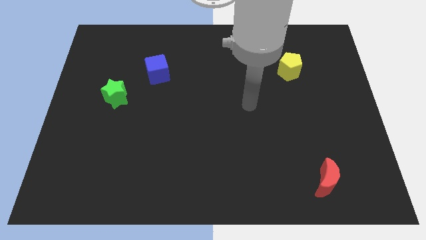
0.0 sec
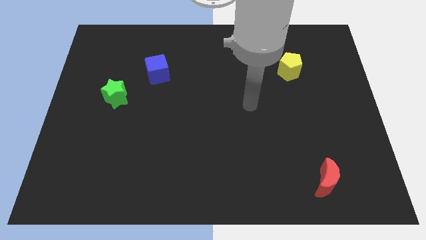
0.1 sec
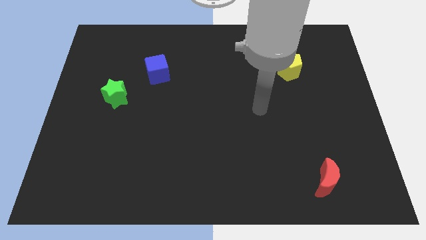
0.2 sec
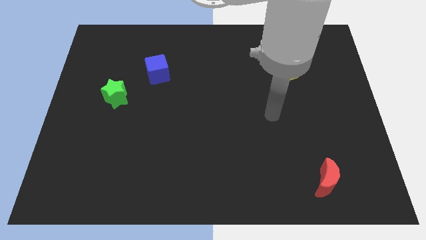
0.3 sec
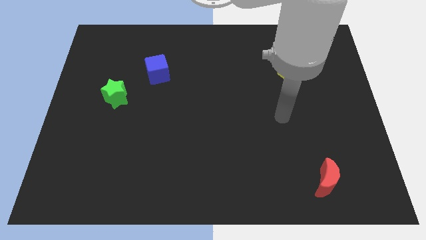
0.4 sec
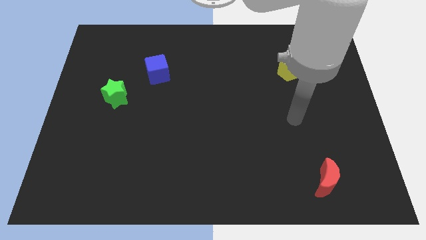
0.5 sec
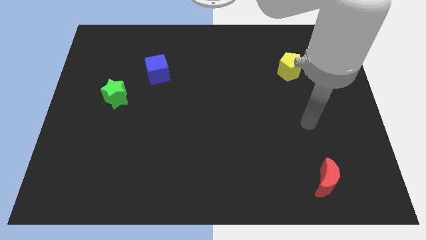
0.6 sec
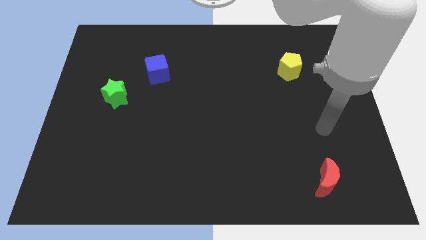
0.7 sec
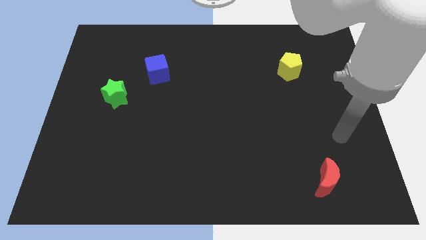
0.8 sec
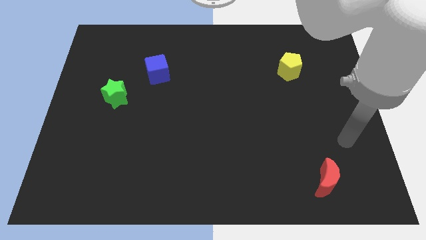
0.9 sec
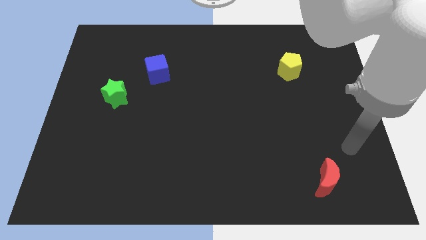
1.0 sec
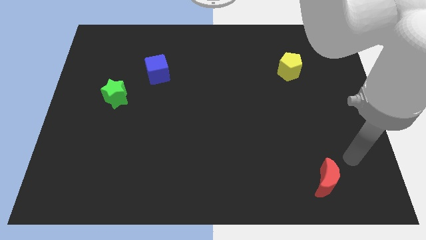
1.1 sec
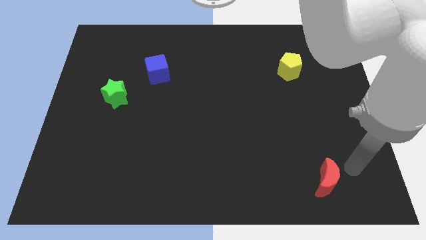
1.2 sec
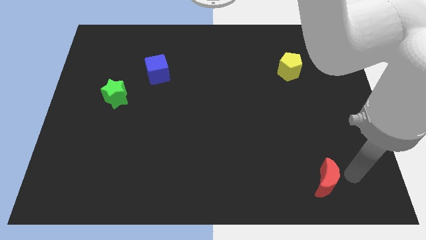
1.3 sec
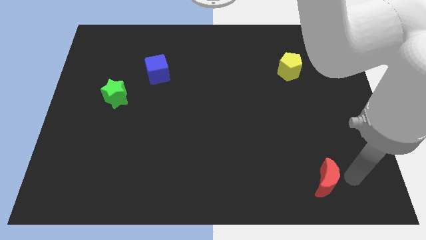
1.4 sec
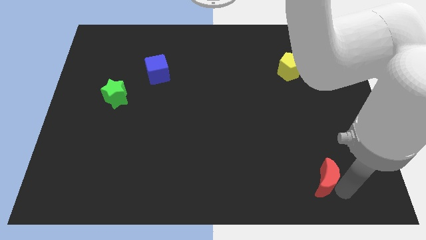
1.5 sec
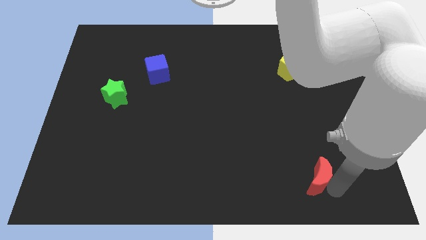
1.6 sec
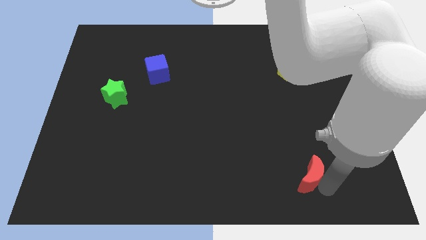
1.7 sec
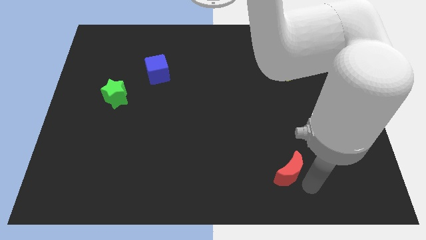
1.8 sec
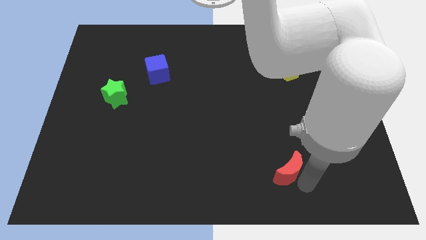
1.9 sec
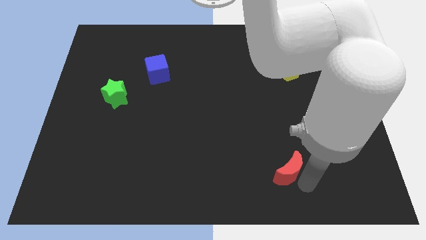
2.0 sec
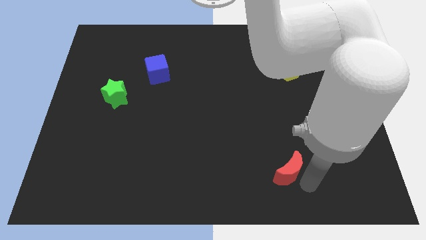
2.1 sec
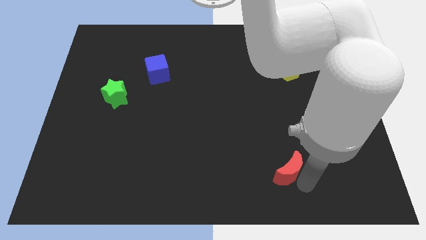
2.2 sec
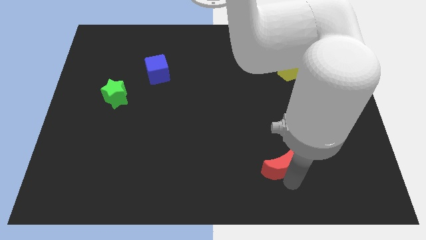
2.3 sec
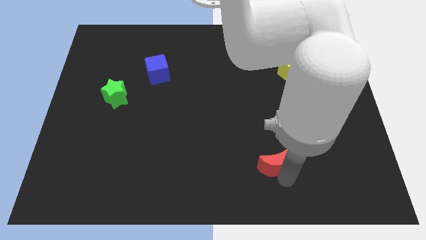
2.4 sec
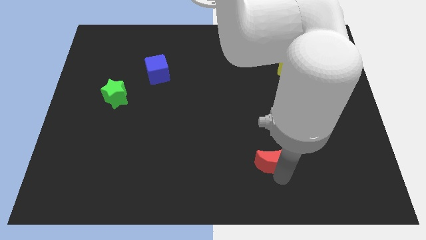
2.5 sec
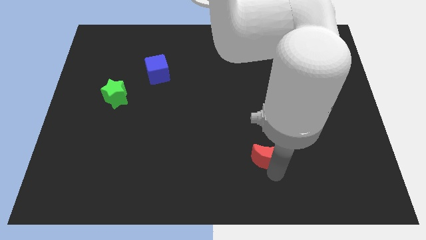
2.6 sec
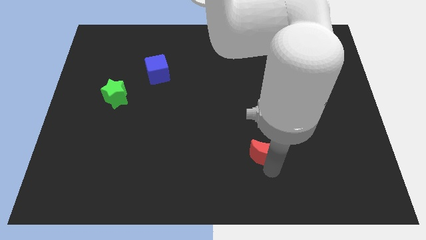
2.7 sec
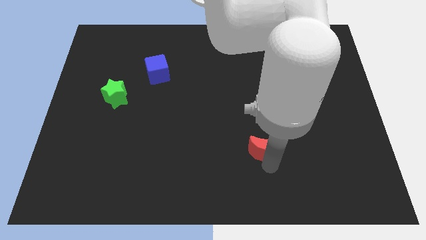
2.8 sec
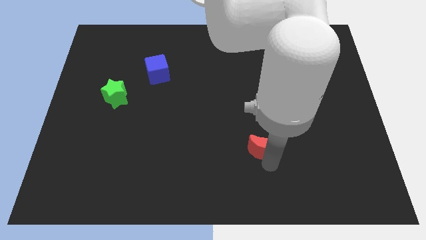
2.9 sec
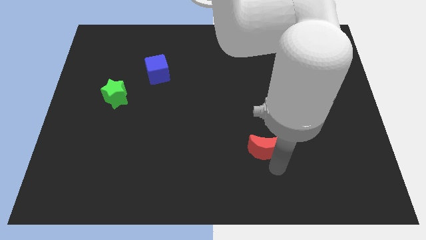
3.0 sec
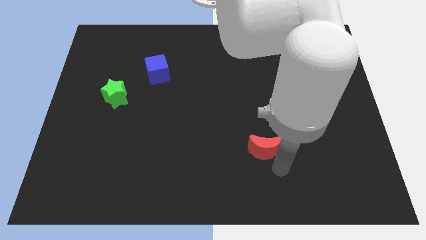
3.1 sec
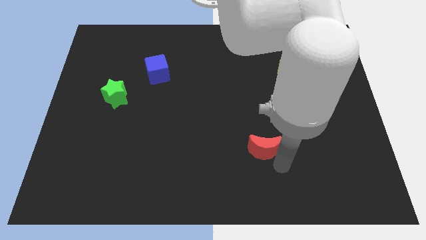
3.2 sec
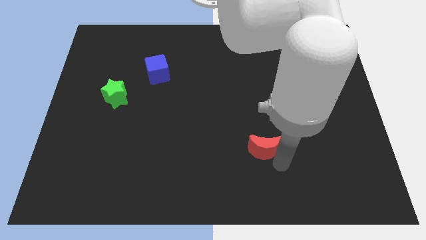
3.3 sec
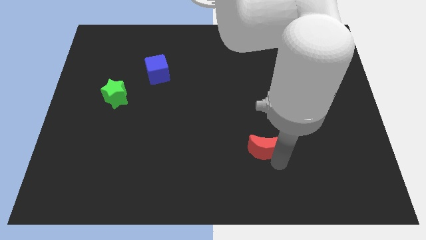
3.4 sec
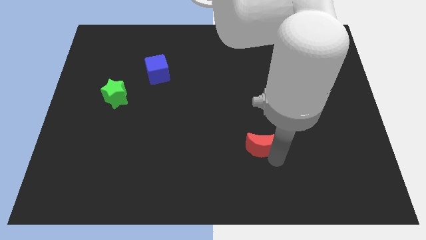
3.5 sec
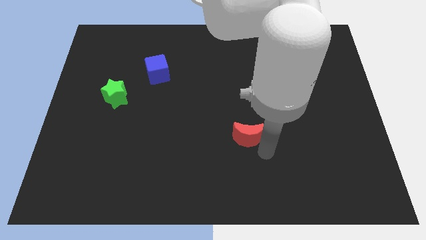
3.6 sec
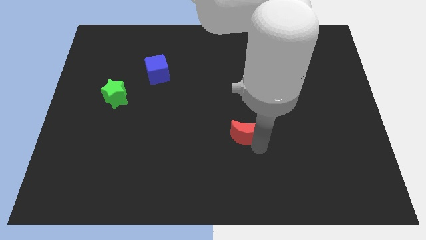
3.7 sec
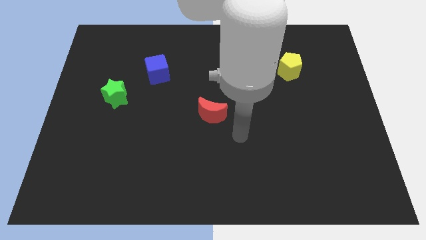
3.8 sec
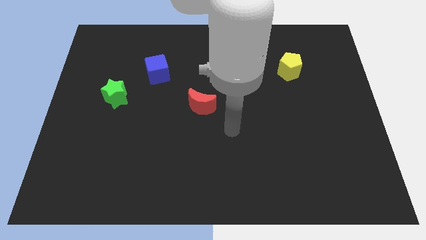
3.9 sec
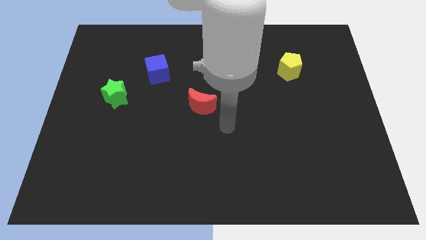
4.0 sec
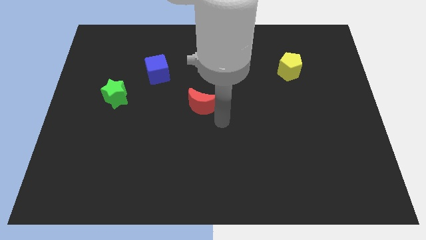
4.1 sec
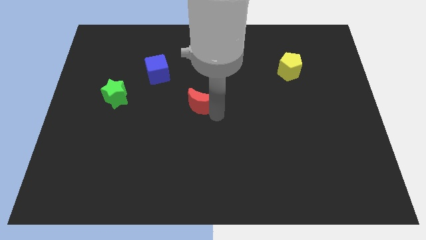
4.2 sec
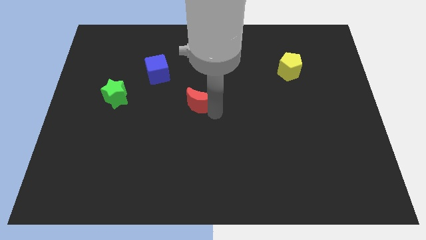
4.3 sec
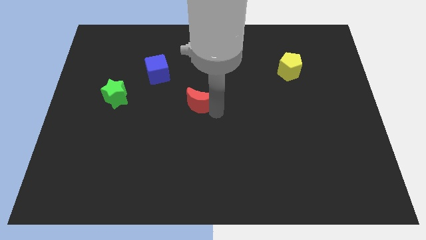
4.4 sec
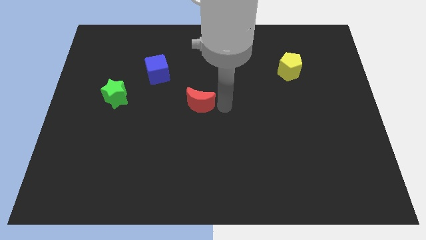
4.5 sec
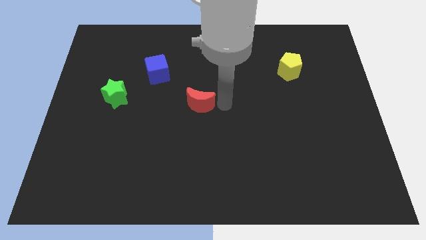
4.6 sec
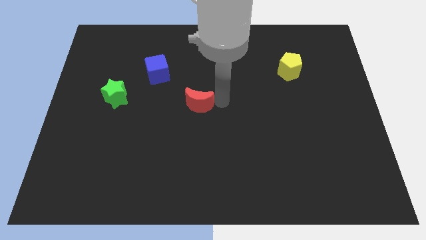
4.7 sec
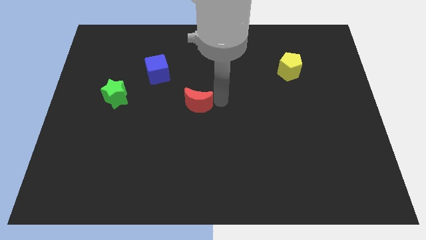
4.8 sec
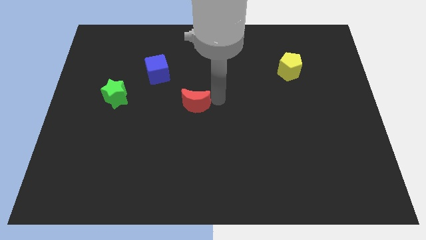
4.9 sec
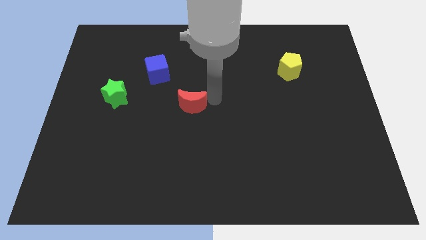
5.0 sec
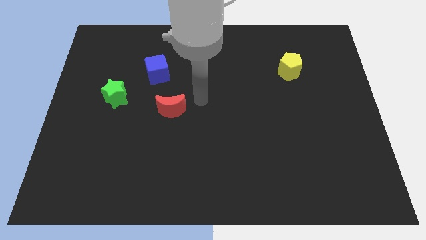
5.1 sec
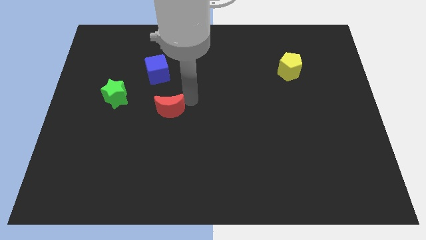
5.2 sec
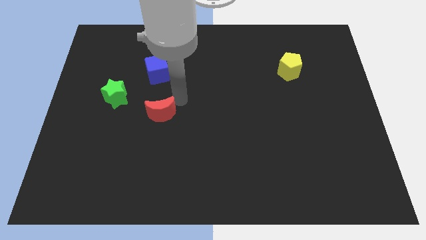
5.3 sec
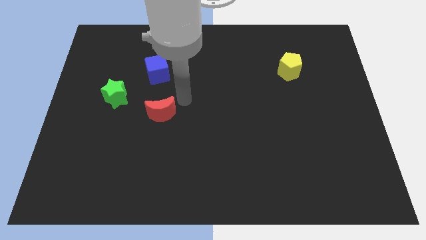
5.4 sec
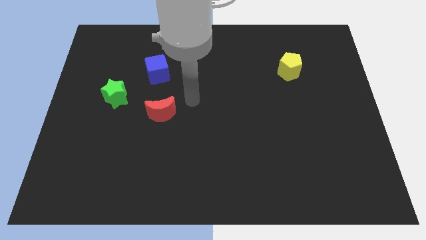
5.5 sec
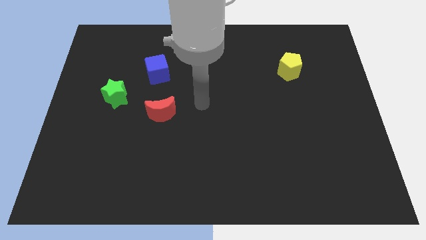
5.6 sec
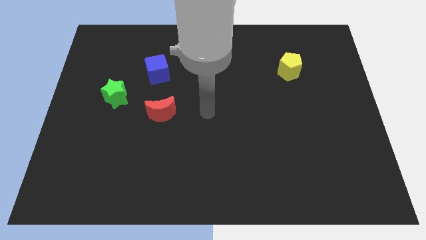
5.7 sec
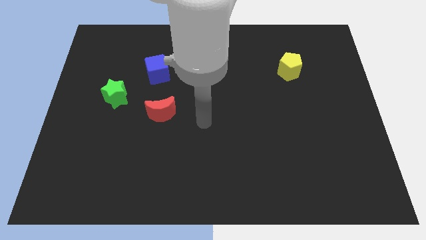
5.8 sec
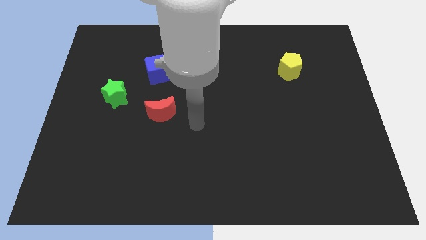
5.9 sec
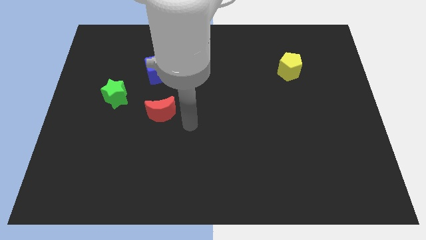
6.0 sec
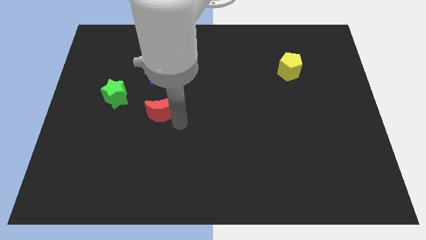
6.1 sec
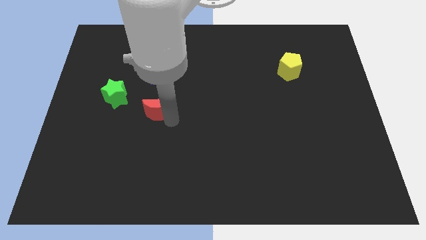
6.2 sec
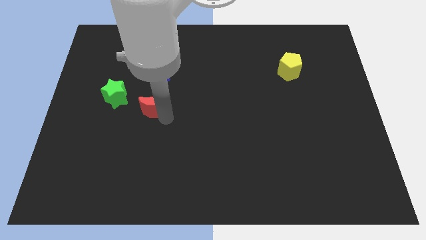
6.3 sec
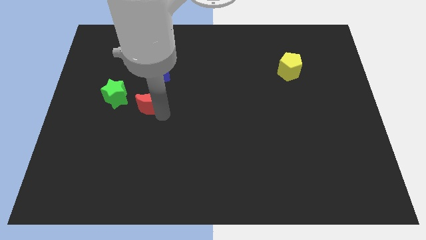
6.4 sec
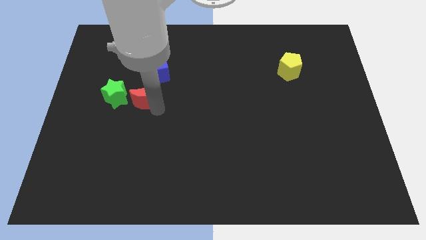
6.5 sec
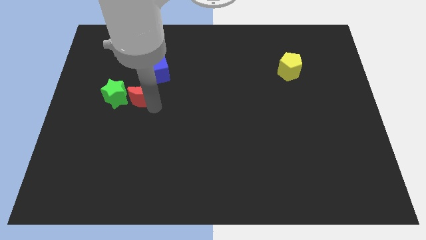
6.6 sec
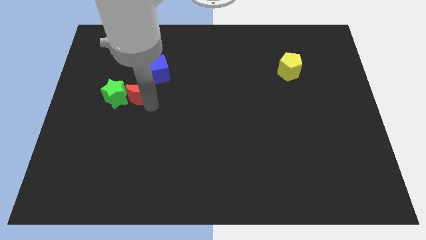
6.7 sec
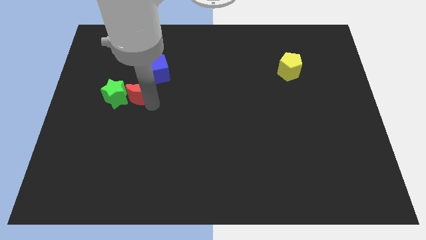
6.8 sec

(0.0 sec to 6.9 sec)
push the red moon close to the green block

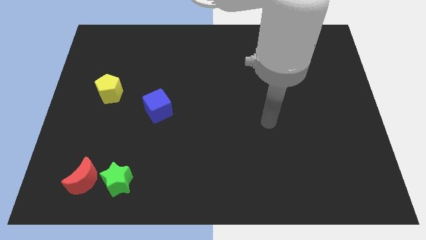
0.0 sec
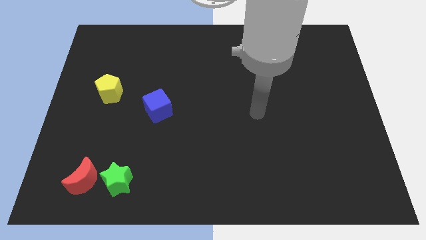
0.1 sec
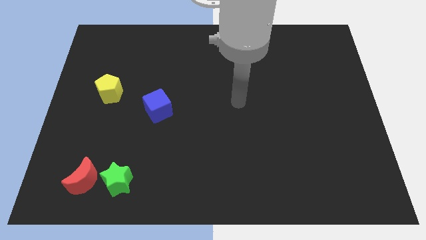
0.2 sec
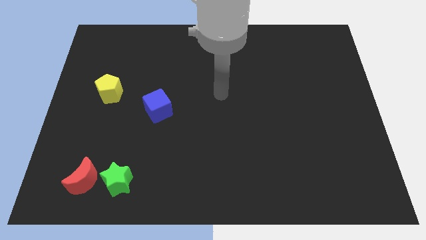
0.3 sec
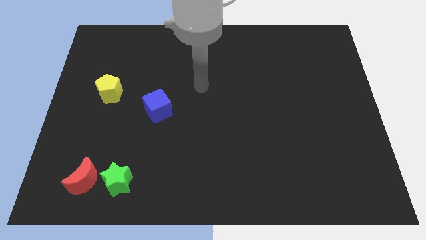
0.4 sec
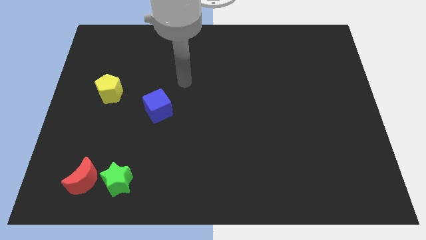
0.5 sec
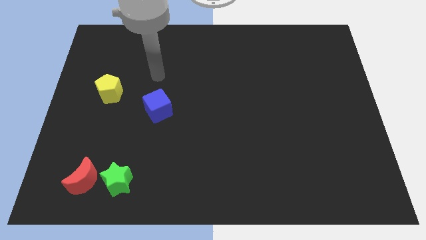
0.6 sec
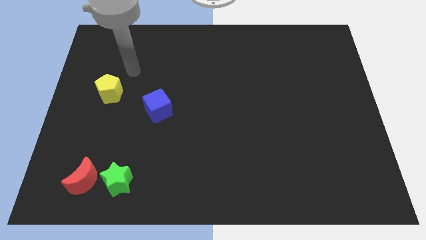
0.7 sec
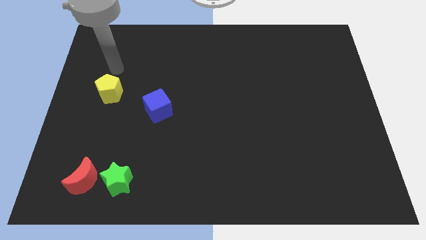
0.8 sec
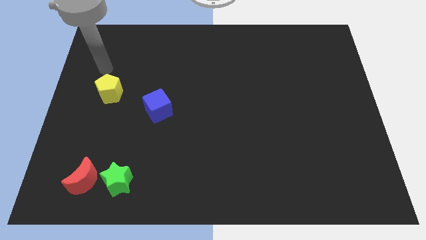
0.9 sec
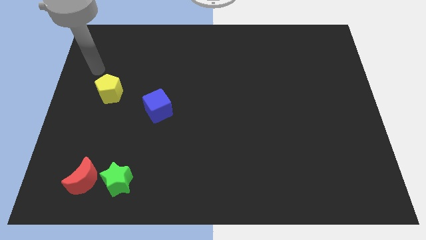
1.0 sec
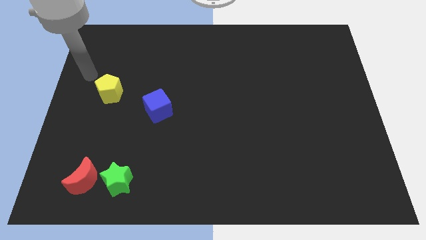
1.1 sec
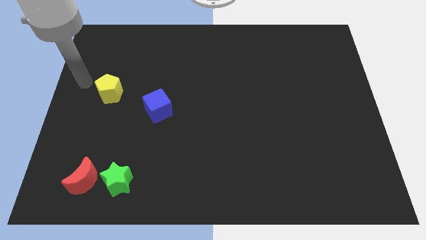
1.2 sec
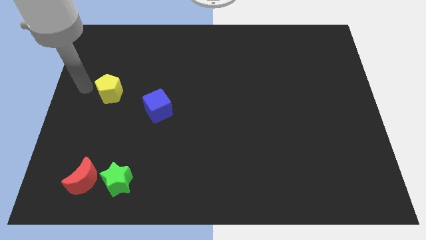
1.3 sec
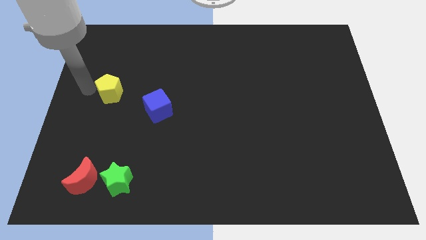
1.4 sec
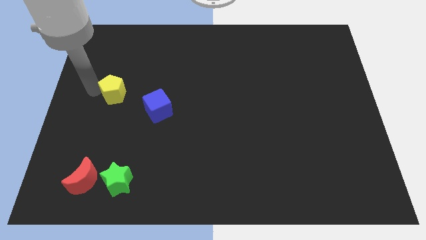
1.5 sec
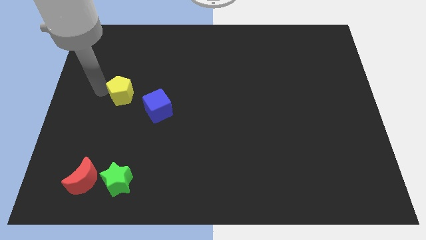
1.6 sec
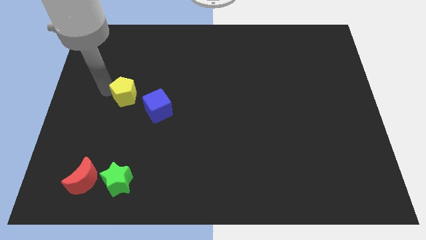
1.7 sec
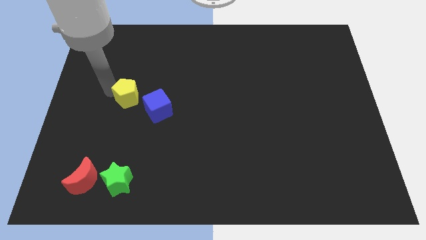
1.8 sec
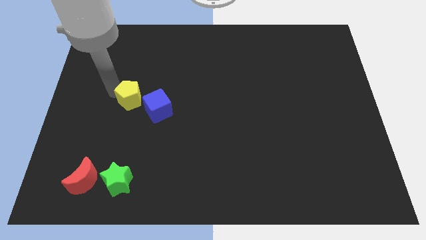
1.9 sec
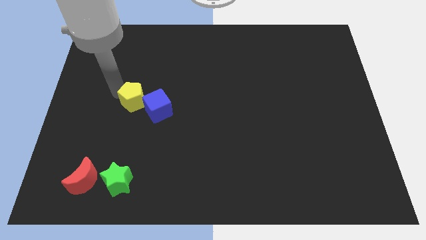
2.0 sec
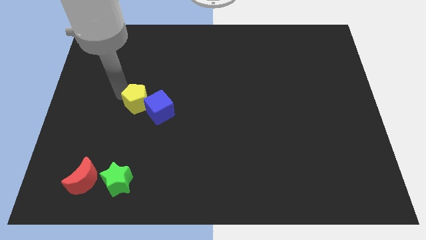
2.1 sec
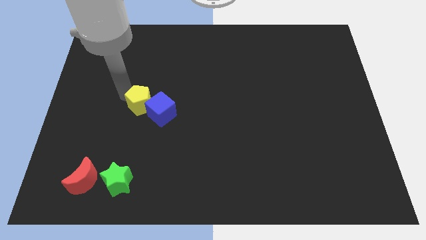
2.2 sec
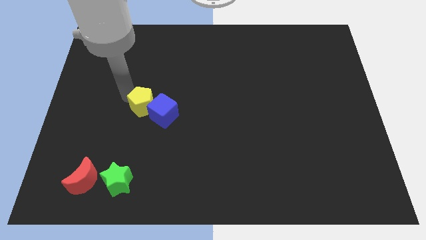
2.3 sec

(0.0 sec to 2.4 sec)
put the yellow block to the blue block
